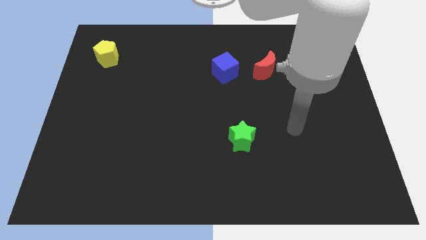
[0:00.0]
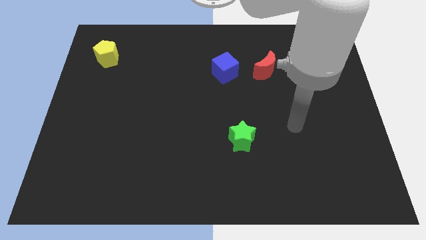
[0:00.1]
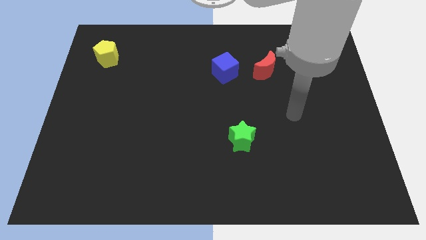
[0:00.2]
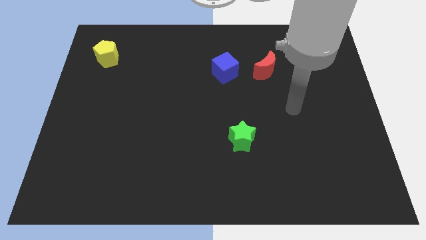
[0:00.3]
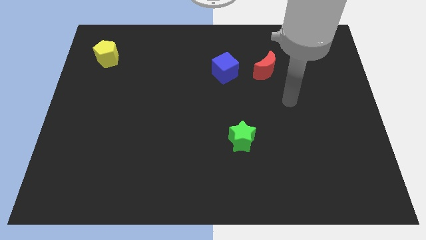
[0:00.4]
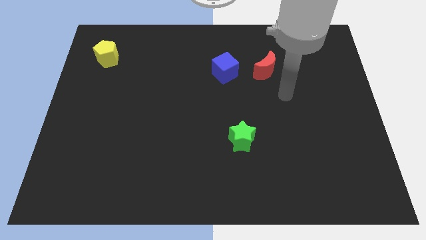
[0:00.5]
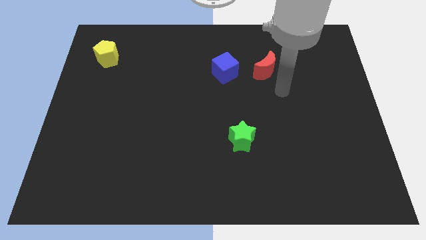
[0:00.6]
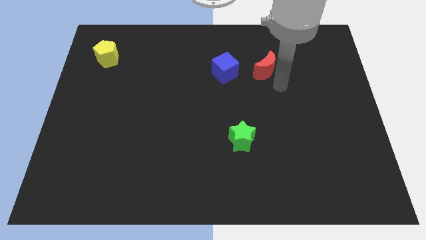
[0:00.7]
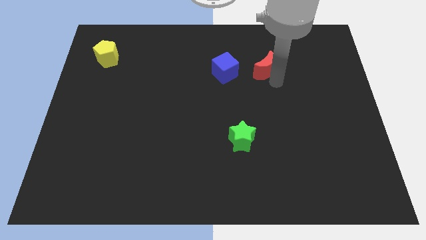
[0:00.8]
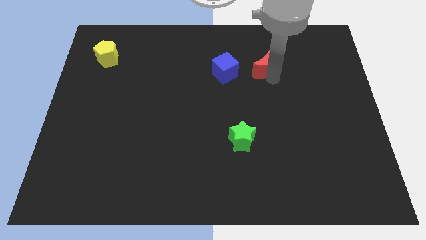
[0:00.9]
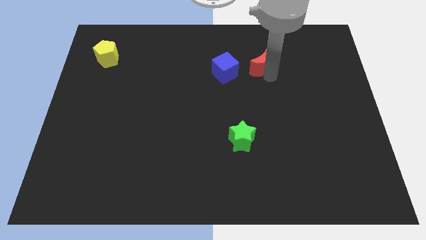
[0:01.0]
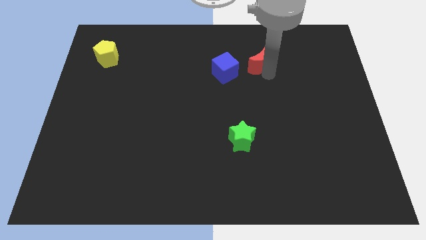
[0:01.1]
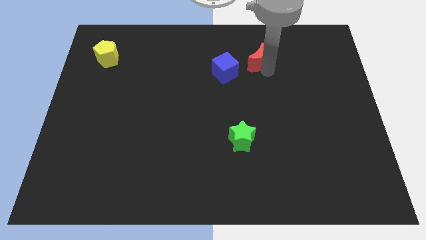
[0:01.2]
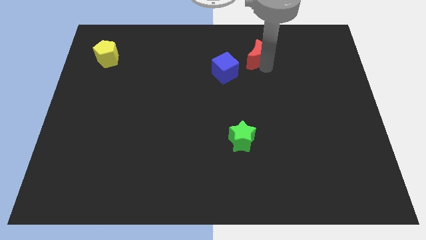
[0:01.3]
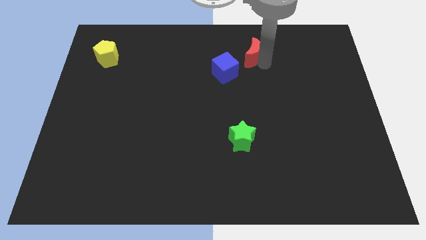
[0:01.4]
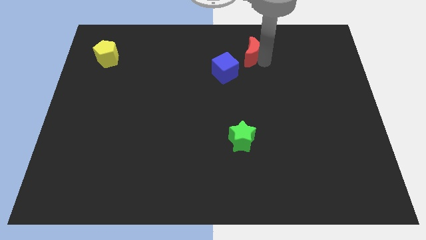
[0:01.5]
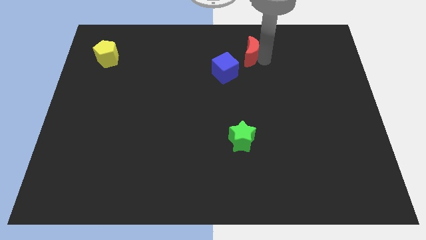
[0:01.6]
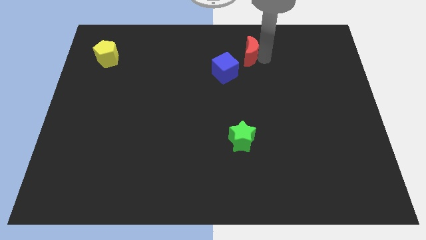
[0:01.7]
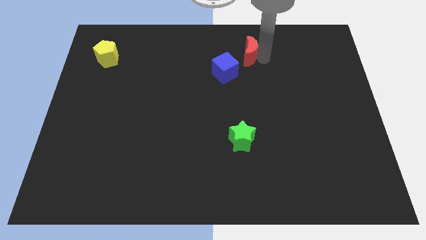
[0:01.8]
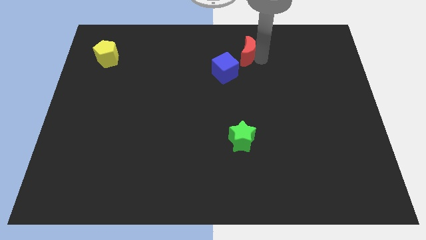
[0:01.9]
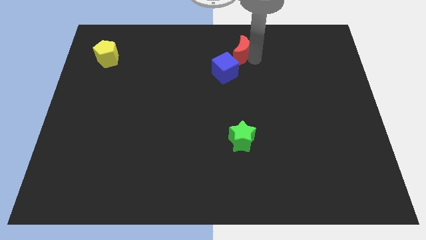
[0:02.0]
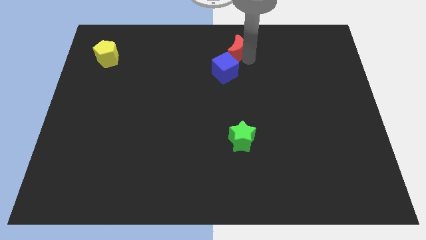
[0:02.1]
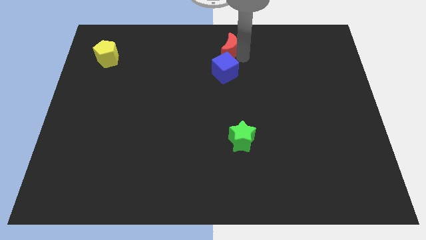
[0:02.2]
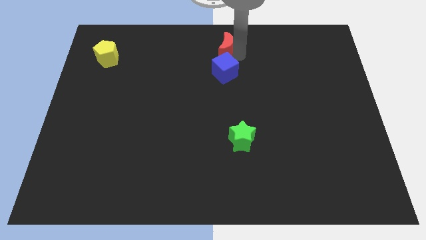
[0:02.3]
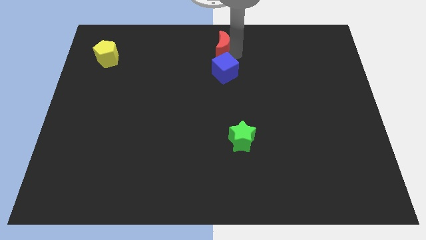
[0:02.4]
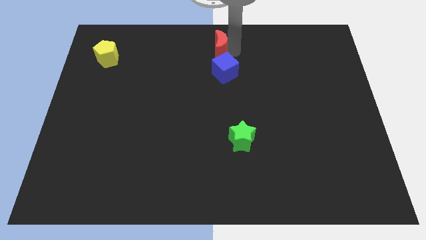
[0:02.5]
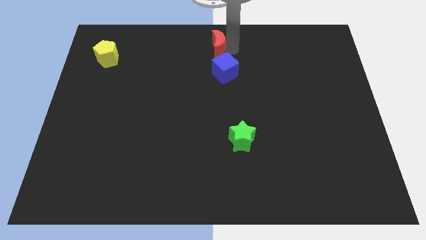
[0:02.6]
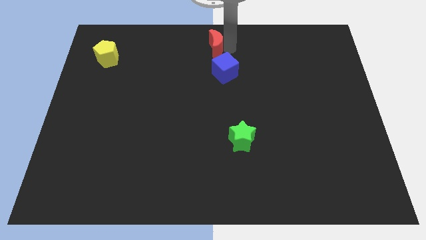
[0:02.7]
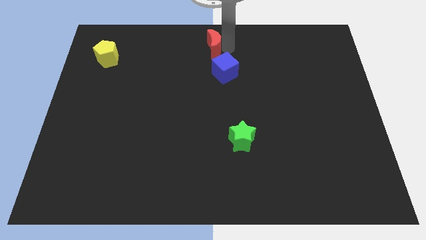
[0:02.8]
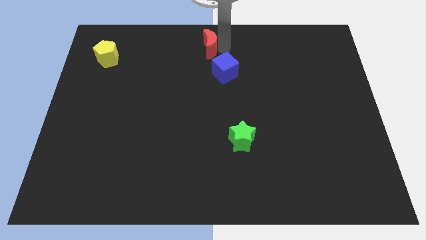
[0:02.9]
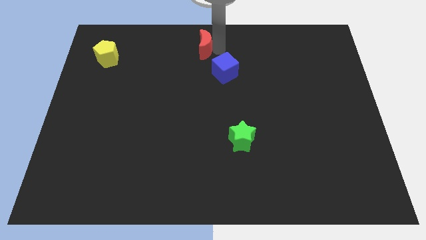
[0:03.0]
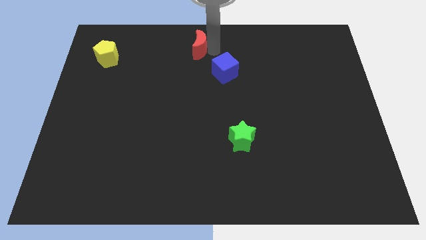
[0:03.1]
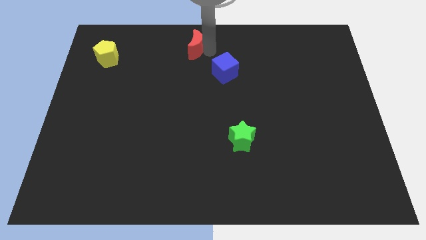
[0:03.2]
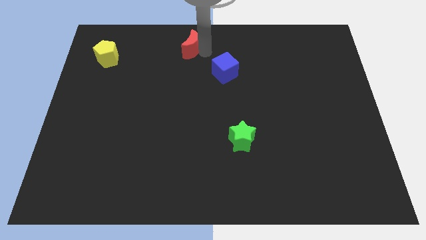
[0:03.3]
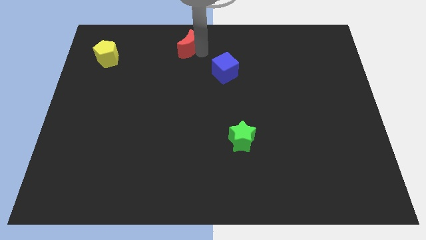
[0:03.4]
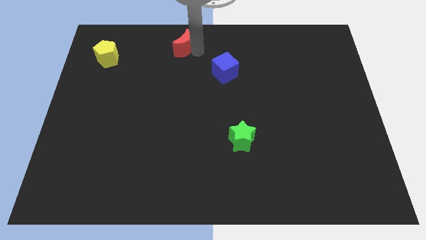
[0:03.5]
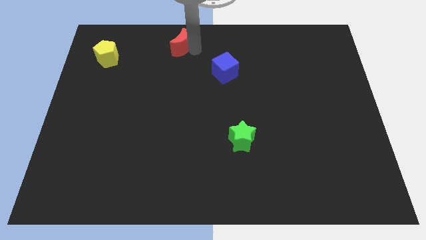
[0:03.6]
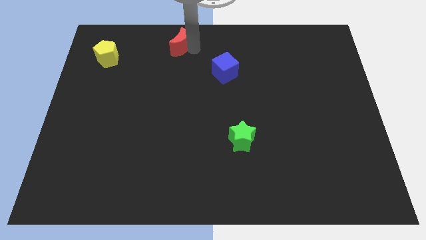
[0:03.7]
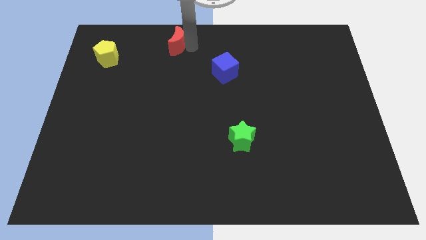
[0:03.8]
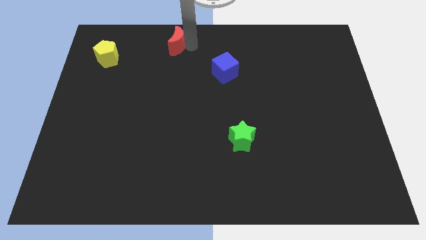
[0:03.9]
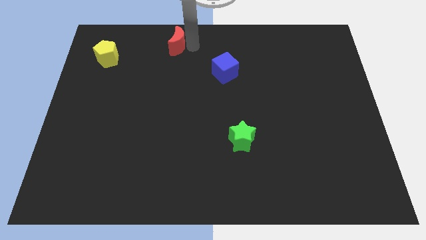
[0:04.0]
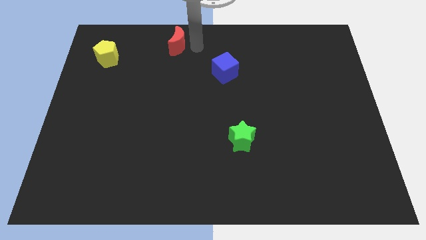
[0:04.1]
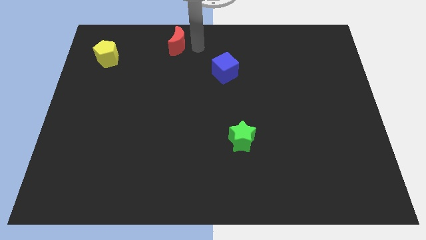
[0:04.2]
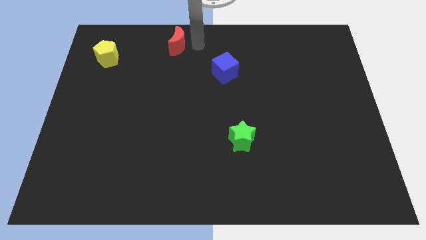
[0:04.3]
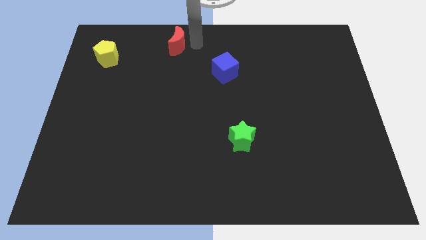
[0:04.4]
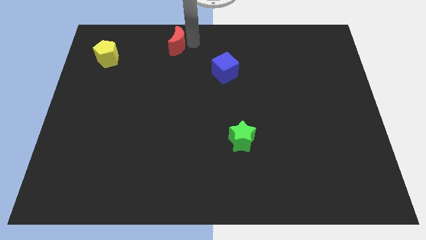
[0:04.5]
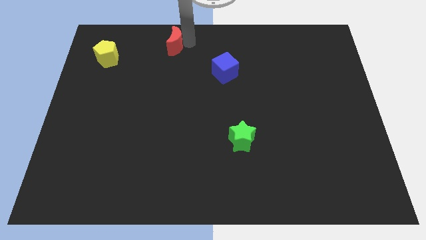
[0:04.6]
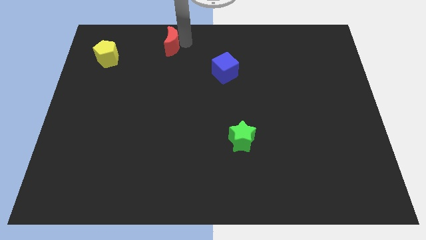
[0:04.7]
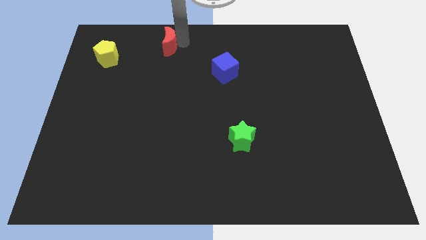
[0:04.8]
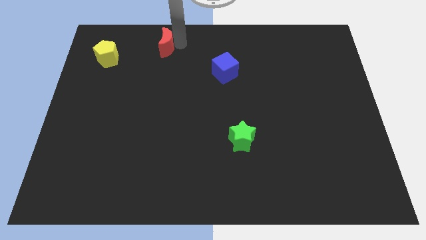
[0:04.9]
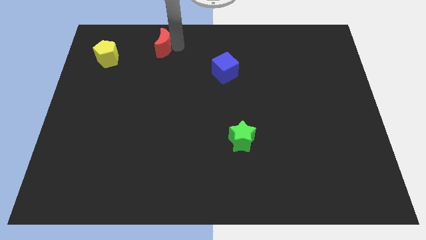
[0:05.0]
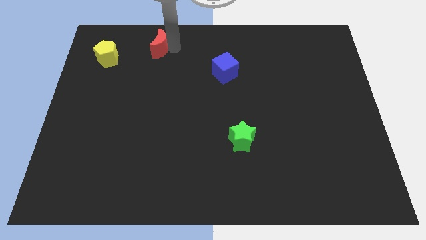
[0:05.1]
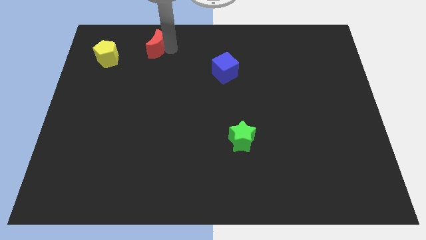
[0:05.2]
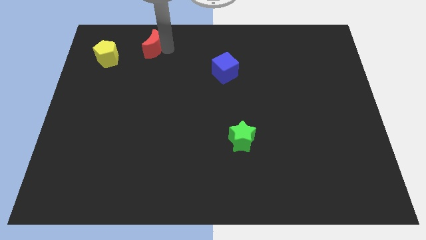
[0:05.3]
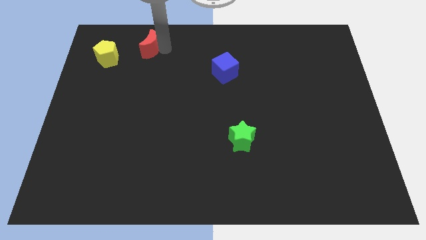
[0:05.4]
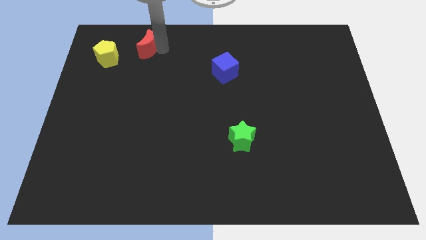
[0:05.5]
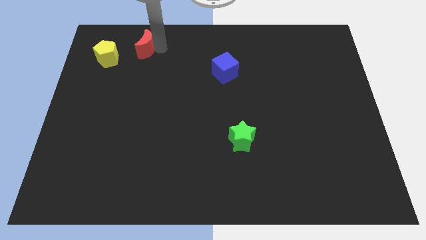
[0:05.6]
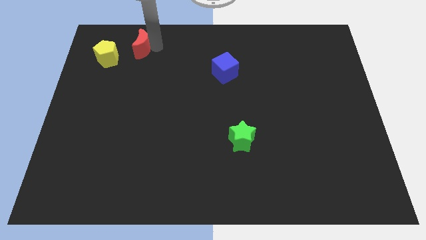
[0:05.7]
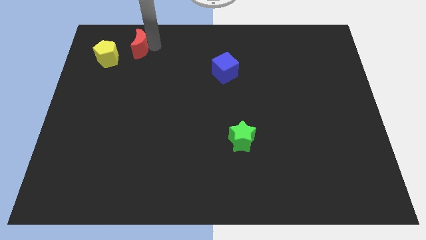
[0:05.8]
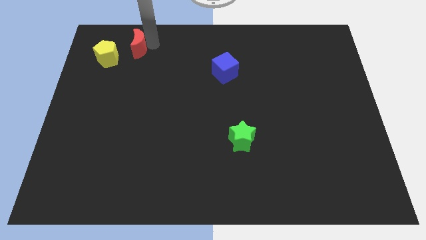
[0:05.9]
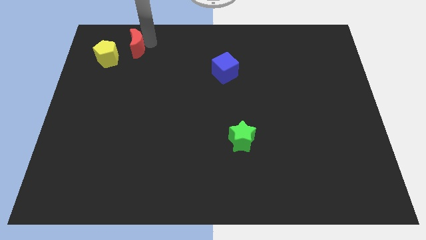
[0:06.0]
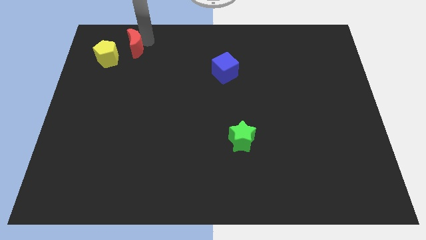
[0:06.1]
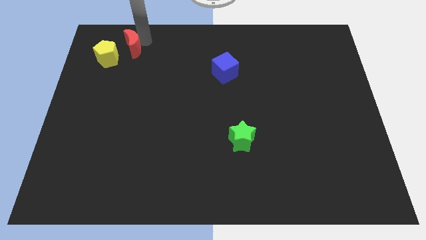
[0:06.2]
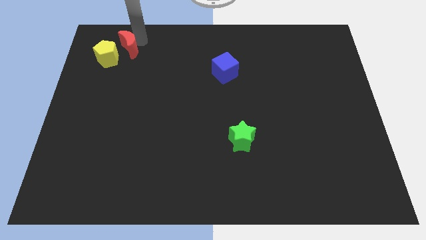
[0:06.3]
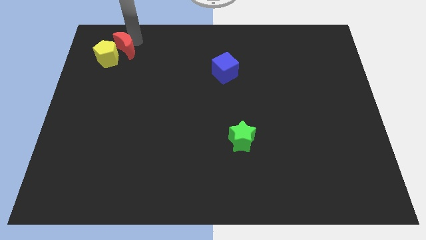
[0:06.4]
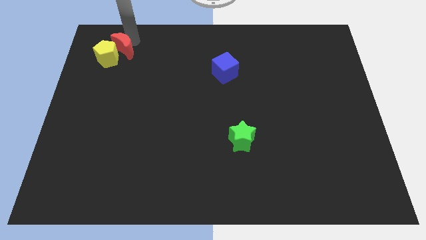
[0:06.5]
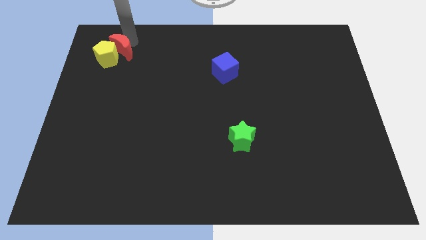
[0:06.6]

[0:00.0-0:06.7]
push the red block to the yellow pentagon

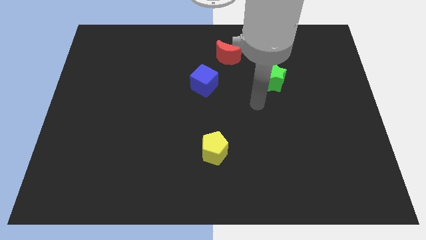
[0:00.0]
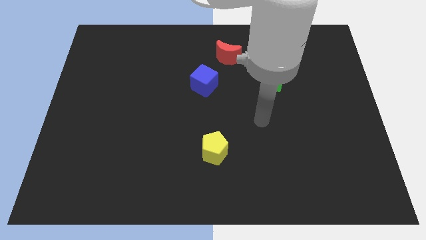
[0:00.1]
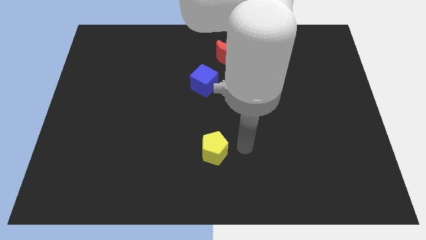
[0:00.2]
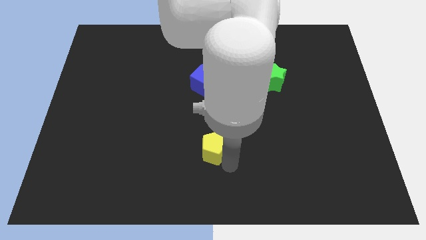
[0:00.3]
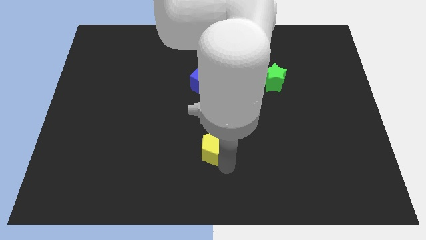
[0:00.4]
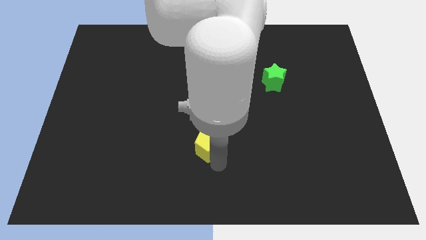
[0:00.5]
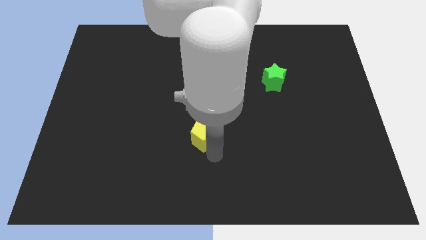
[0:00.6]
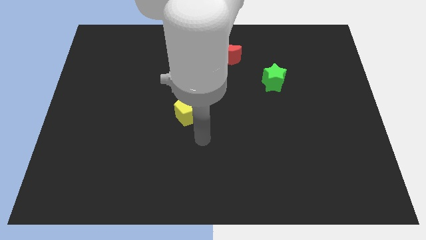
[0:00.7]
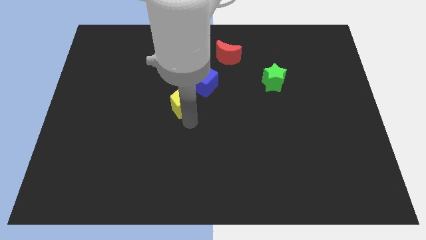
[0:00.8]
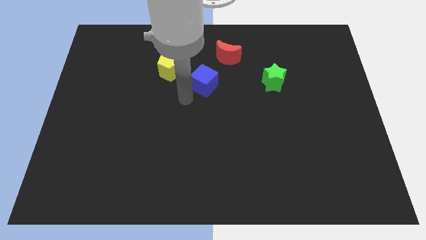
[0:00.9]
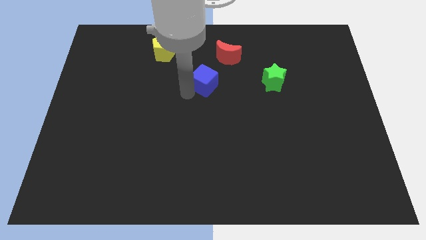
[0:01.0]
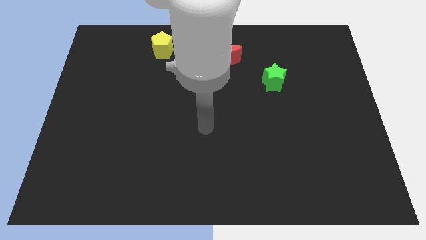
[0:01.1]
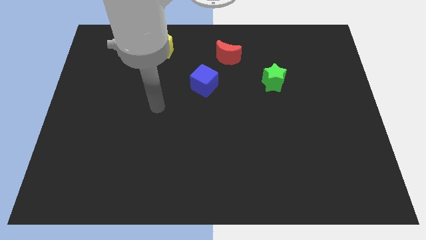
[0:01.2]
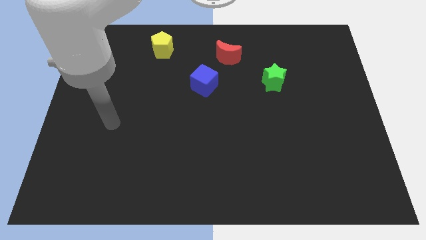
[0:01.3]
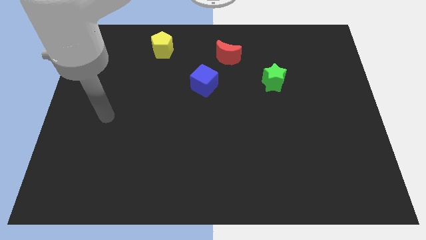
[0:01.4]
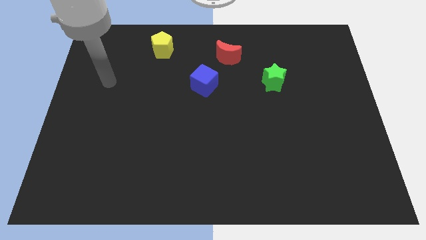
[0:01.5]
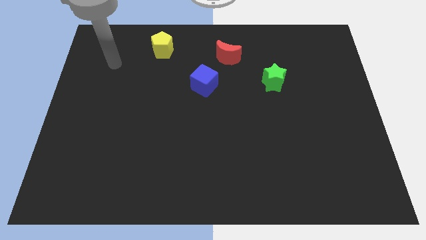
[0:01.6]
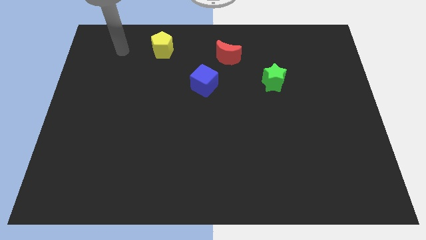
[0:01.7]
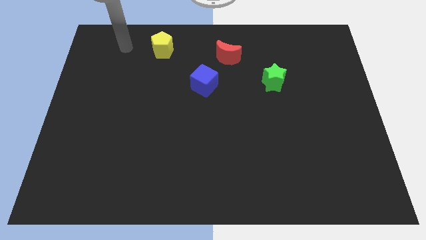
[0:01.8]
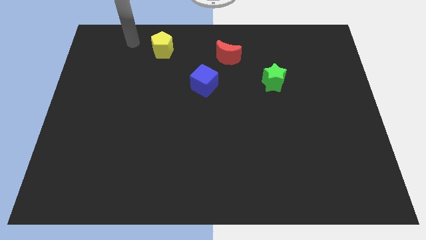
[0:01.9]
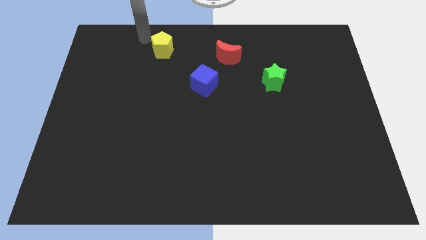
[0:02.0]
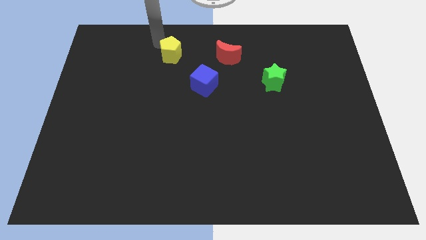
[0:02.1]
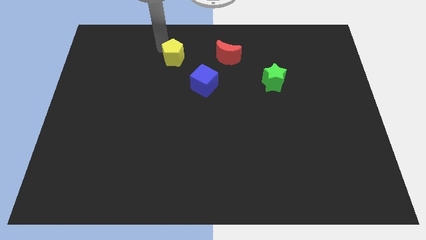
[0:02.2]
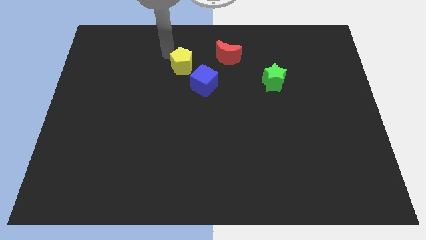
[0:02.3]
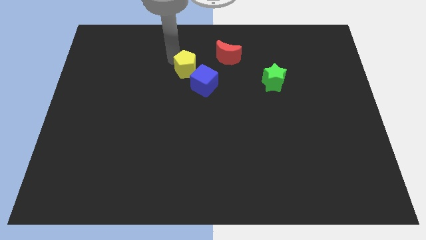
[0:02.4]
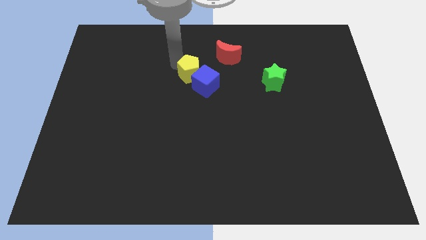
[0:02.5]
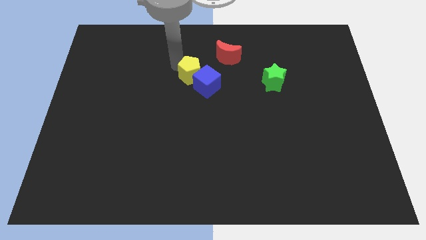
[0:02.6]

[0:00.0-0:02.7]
slide the yellow pentagon next to the blue cube
